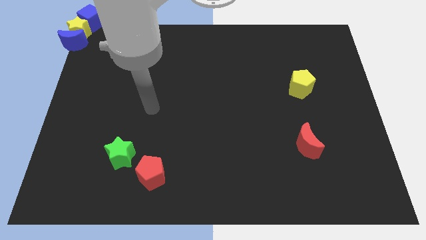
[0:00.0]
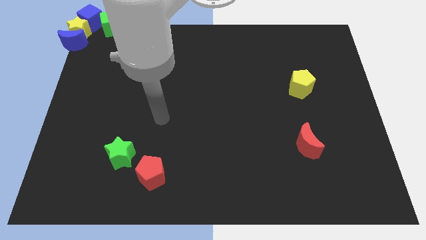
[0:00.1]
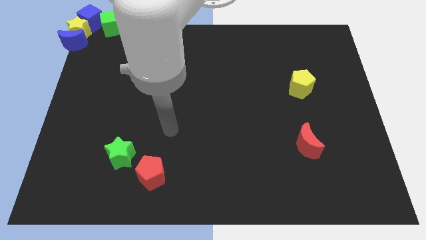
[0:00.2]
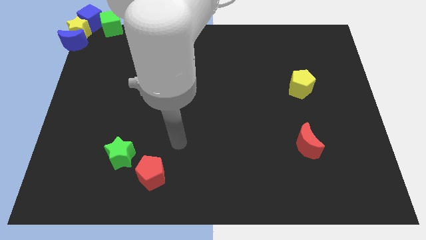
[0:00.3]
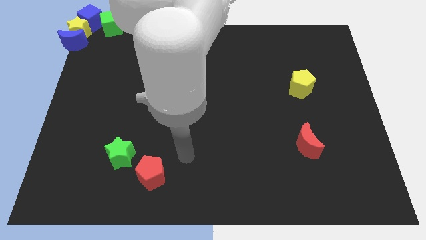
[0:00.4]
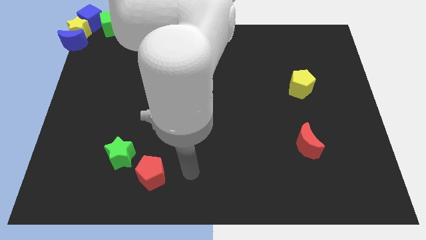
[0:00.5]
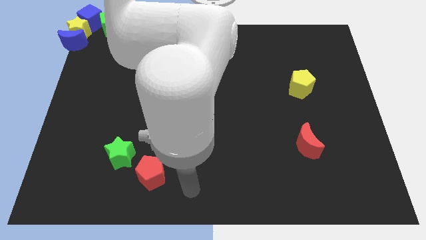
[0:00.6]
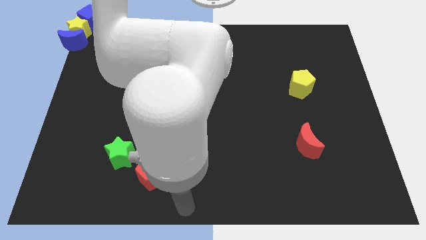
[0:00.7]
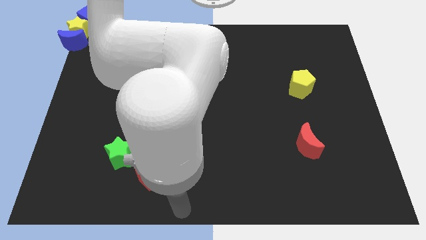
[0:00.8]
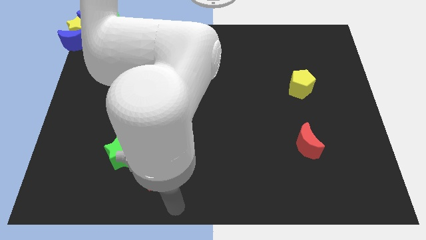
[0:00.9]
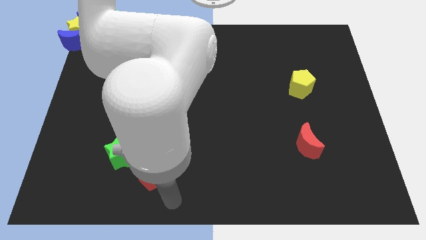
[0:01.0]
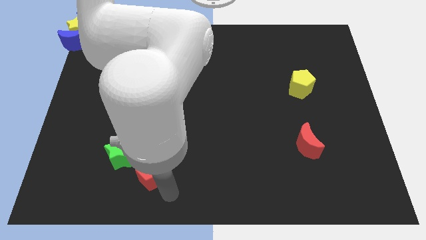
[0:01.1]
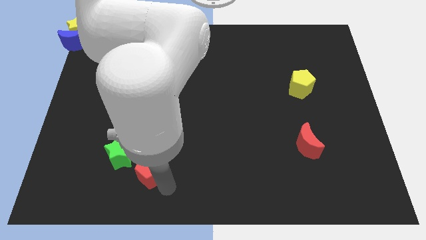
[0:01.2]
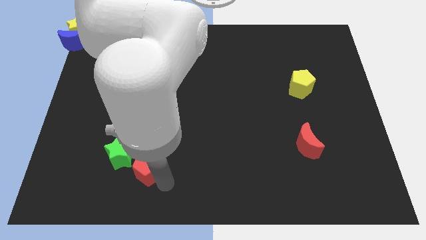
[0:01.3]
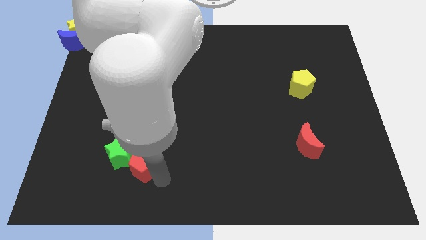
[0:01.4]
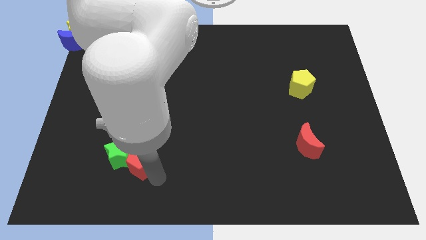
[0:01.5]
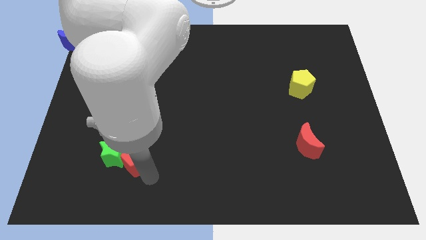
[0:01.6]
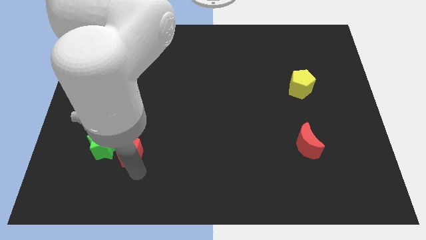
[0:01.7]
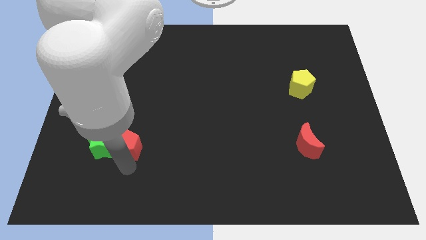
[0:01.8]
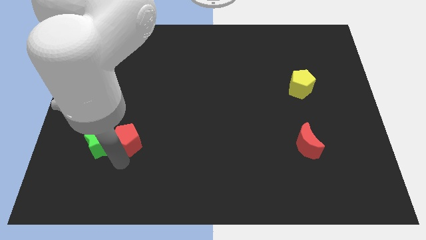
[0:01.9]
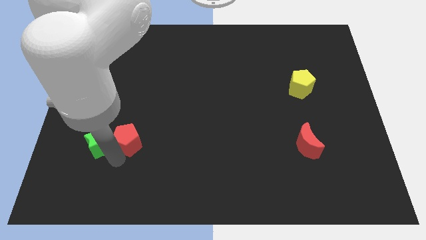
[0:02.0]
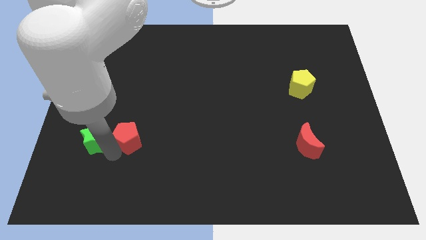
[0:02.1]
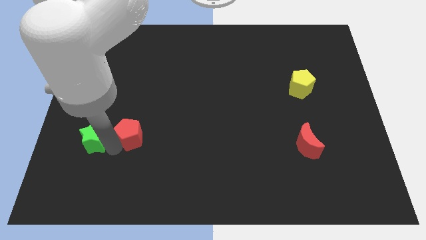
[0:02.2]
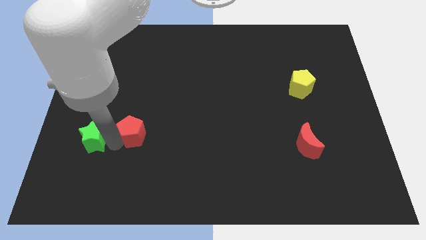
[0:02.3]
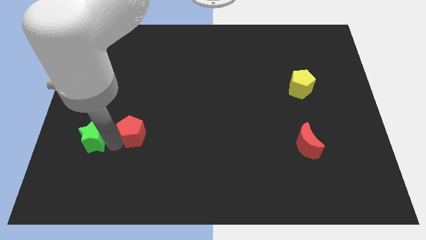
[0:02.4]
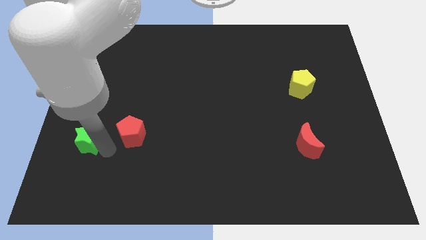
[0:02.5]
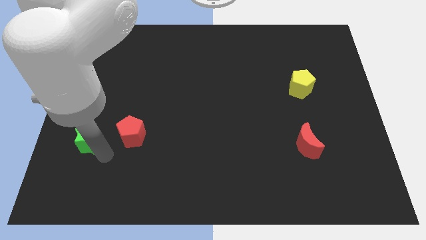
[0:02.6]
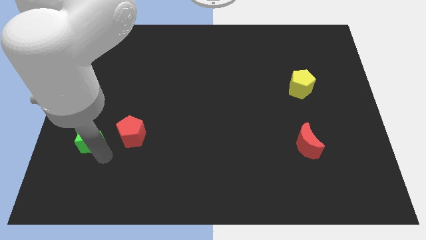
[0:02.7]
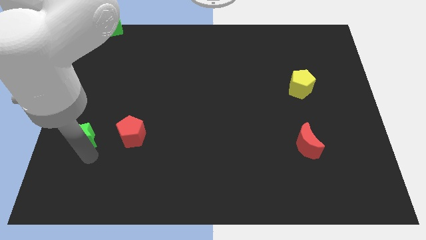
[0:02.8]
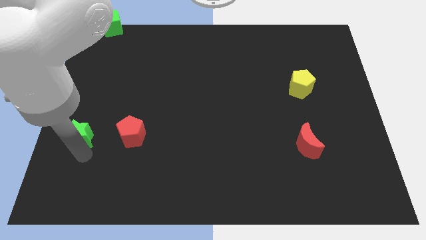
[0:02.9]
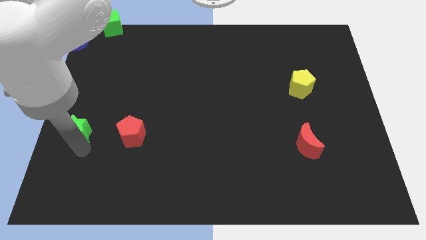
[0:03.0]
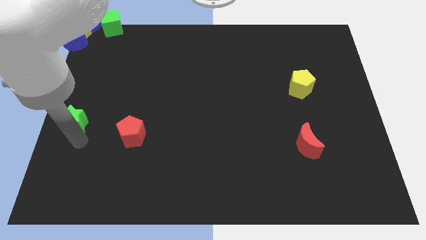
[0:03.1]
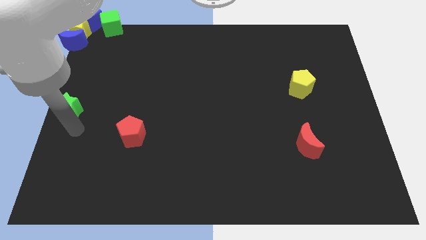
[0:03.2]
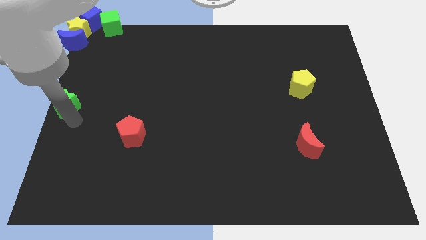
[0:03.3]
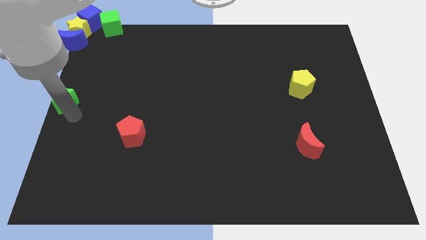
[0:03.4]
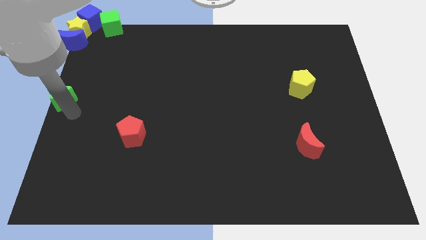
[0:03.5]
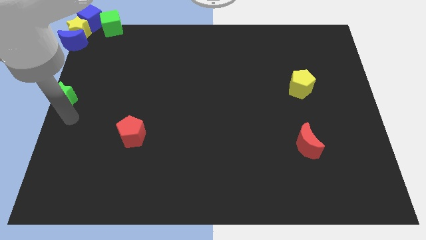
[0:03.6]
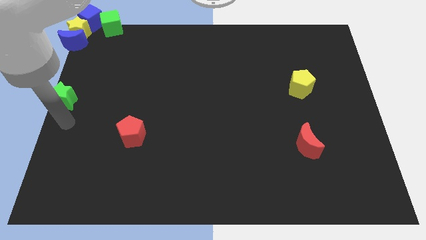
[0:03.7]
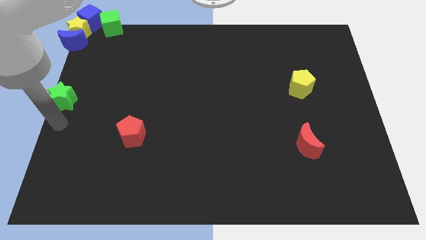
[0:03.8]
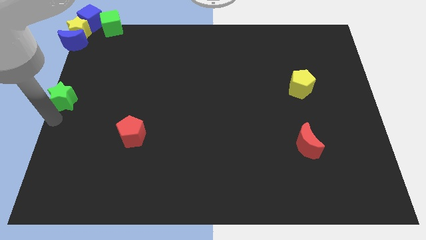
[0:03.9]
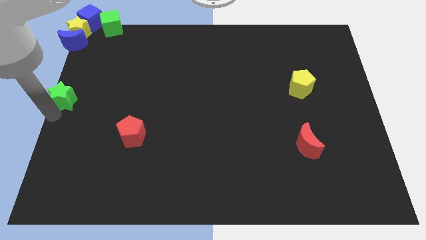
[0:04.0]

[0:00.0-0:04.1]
push the green star to the center left

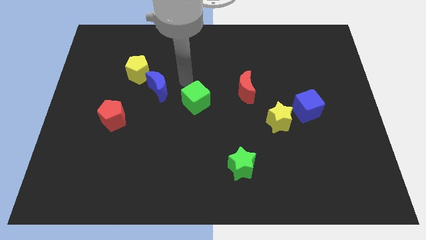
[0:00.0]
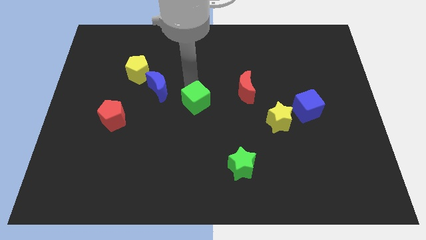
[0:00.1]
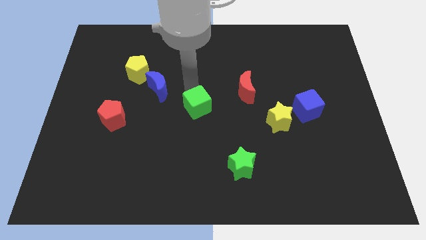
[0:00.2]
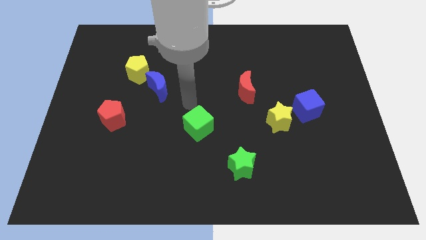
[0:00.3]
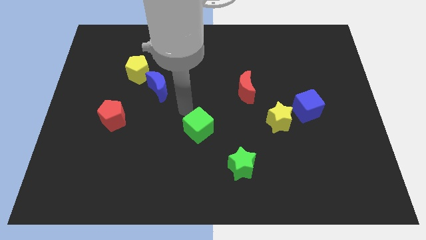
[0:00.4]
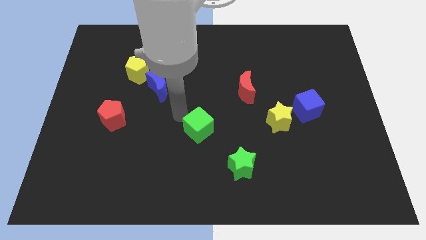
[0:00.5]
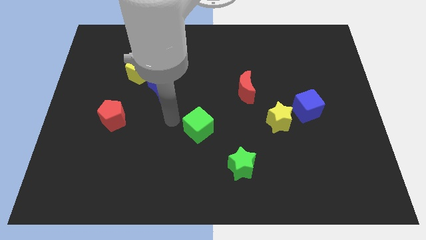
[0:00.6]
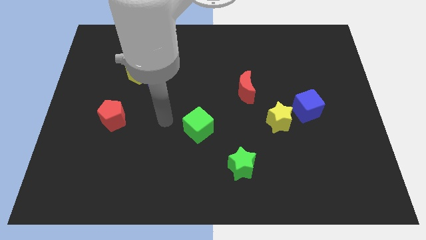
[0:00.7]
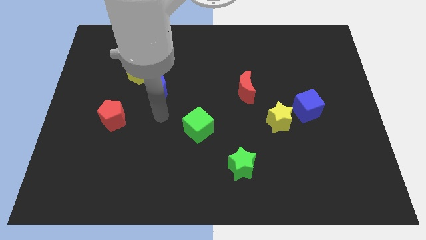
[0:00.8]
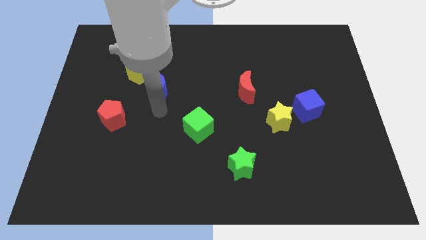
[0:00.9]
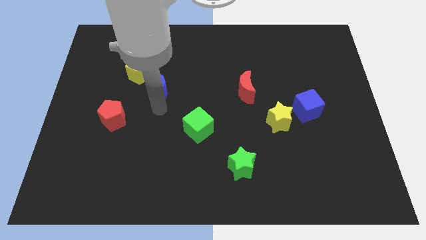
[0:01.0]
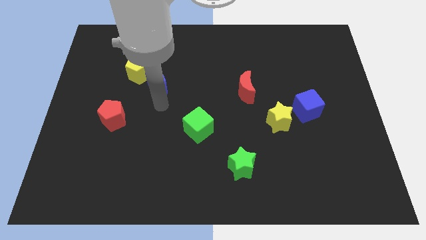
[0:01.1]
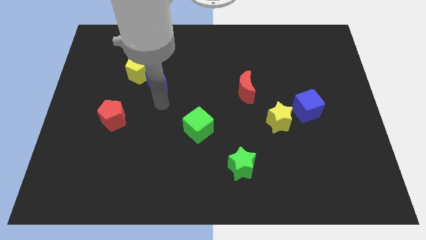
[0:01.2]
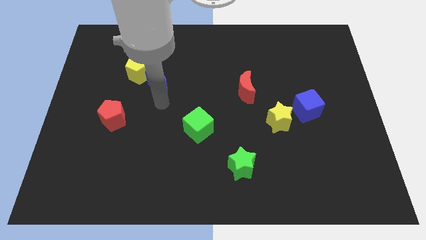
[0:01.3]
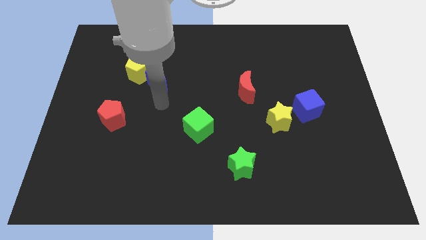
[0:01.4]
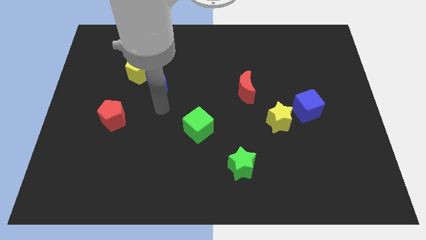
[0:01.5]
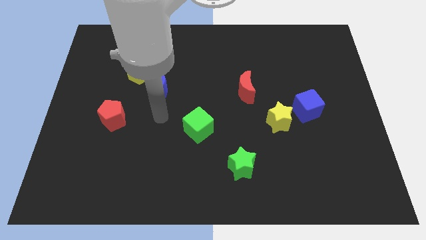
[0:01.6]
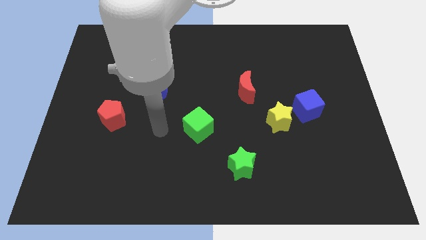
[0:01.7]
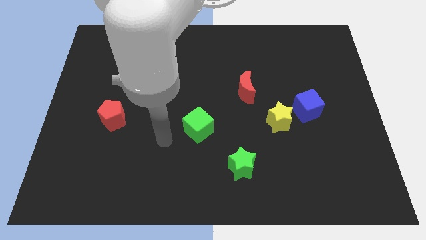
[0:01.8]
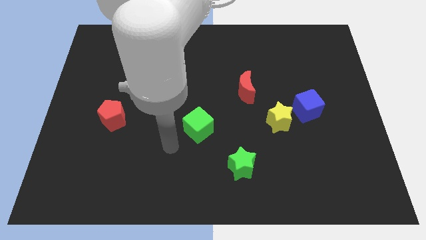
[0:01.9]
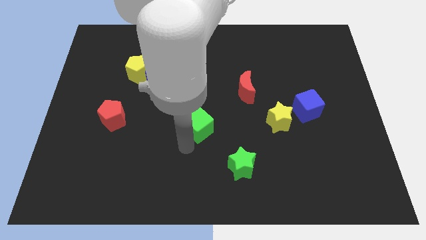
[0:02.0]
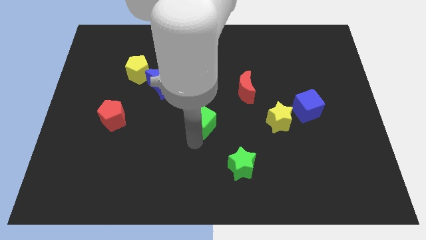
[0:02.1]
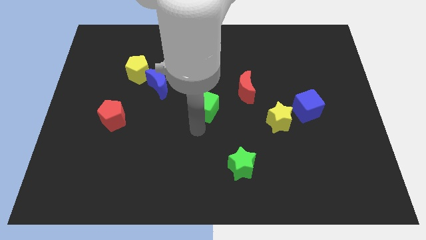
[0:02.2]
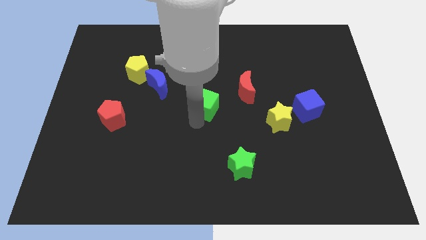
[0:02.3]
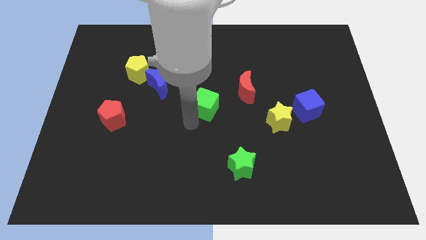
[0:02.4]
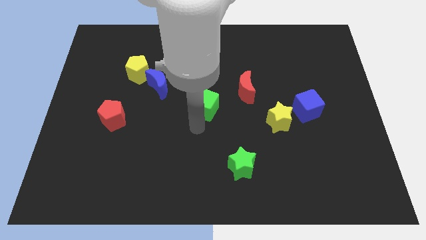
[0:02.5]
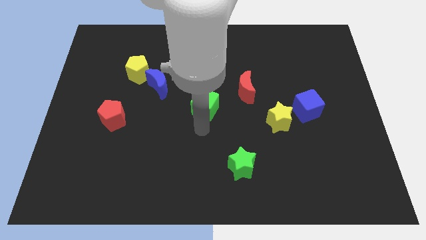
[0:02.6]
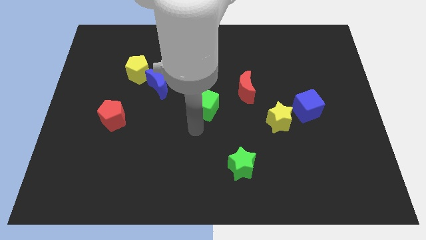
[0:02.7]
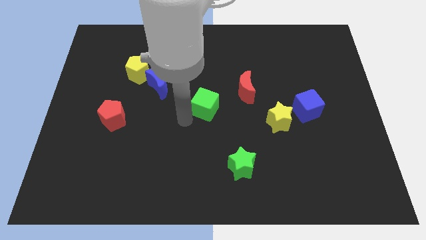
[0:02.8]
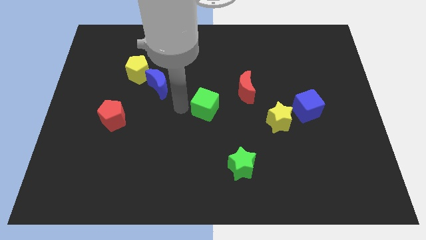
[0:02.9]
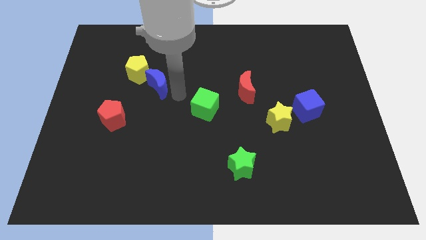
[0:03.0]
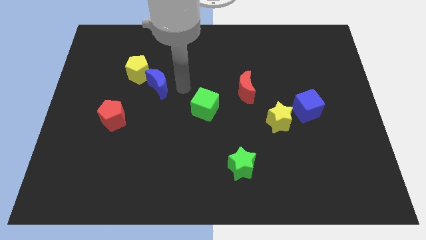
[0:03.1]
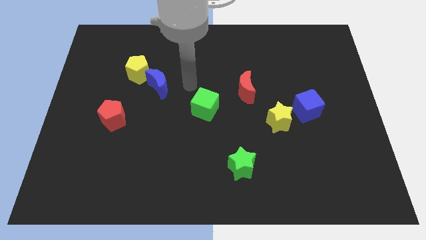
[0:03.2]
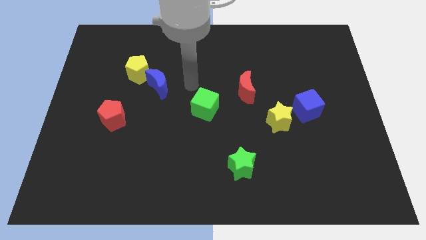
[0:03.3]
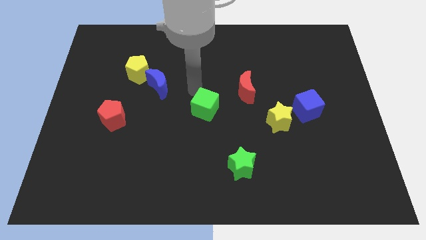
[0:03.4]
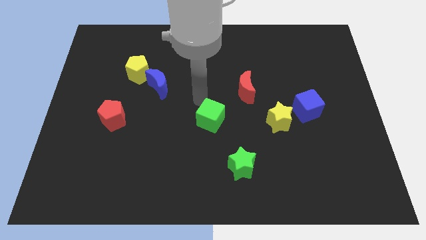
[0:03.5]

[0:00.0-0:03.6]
place the green cube to the center of the board

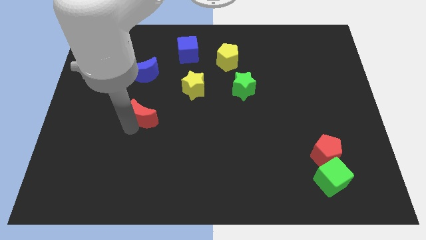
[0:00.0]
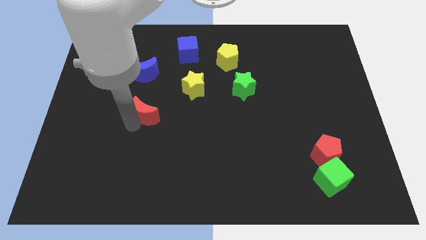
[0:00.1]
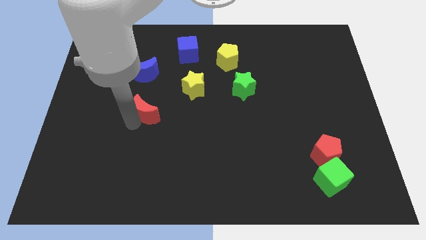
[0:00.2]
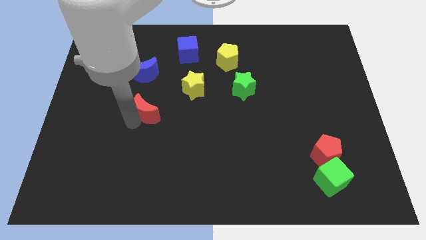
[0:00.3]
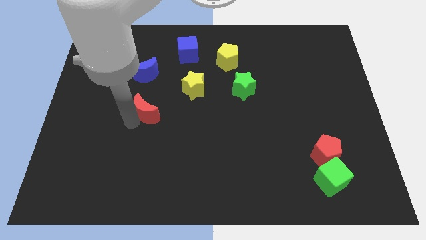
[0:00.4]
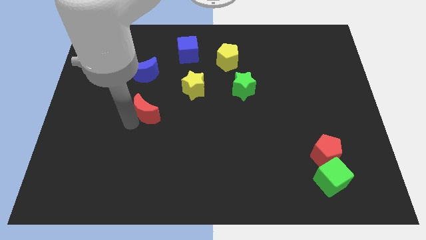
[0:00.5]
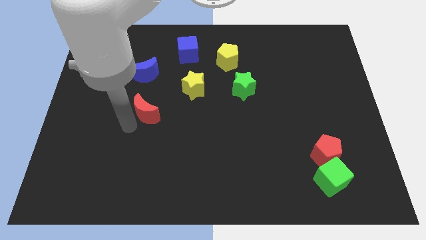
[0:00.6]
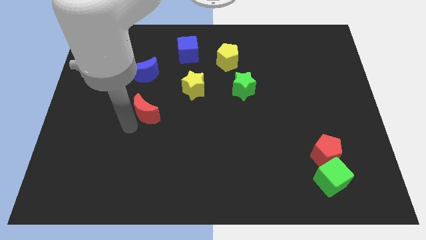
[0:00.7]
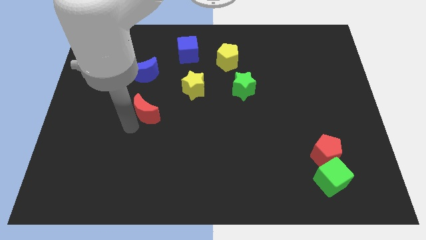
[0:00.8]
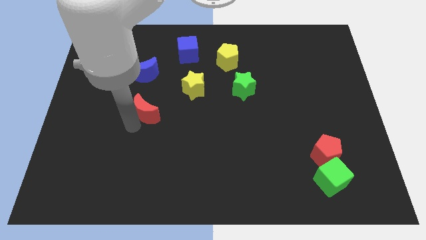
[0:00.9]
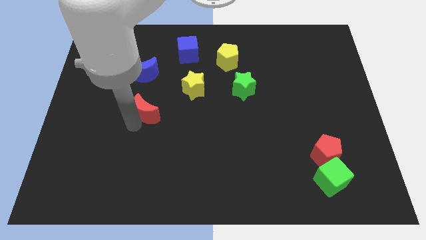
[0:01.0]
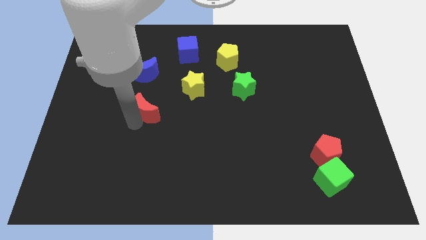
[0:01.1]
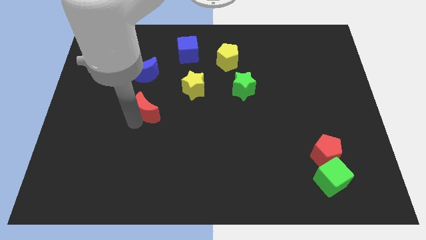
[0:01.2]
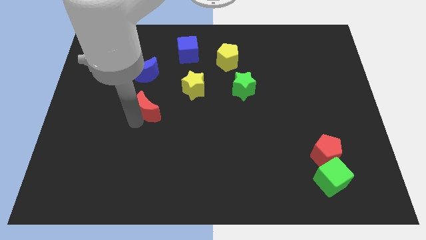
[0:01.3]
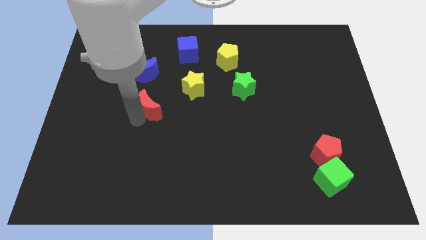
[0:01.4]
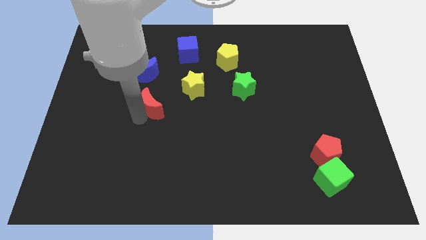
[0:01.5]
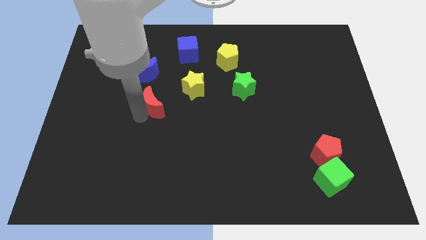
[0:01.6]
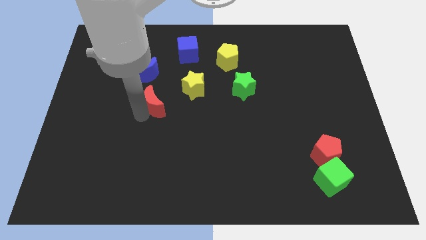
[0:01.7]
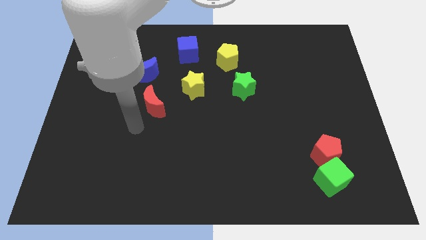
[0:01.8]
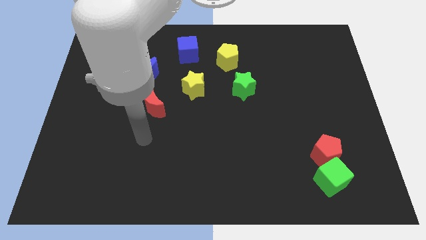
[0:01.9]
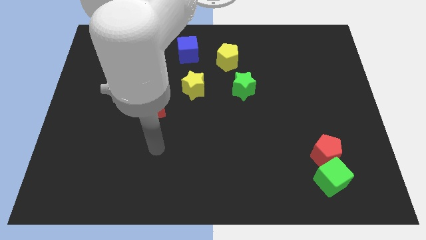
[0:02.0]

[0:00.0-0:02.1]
put the red moon underneath the blue moon
